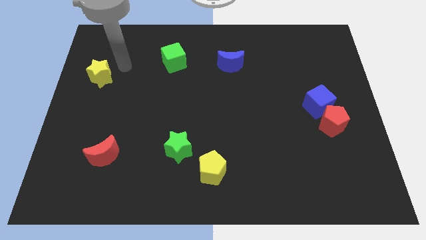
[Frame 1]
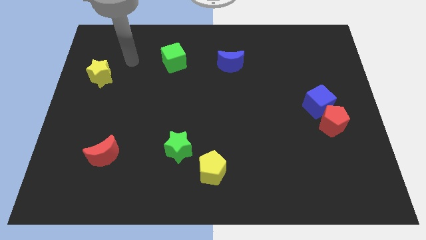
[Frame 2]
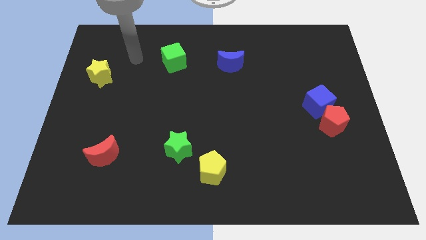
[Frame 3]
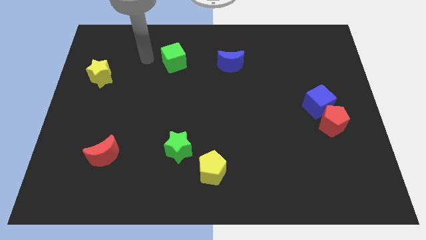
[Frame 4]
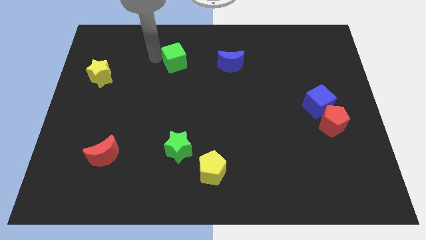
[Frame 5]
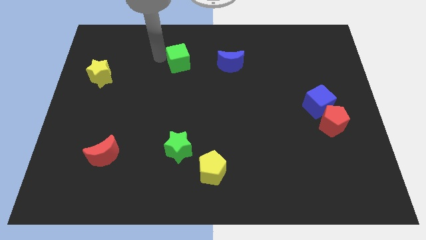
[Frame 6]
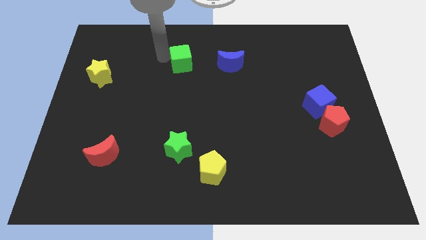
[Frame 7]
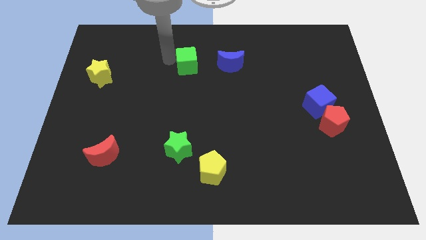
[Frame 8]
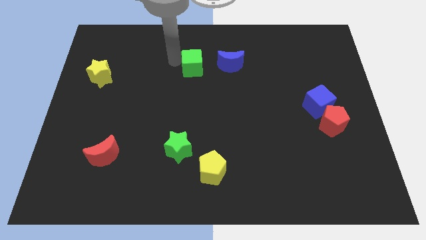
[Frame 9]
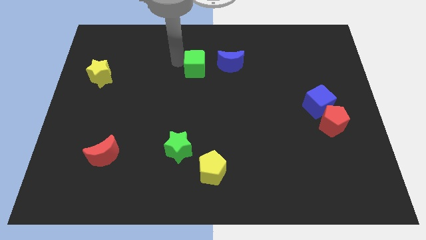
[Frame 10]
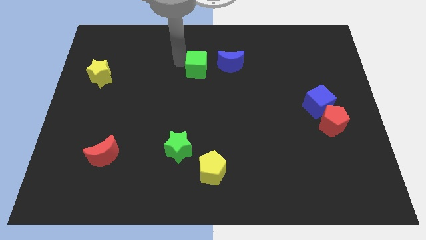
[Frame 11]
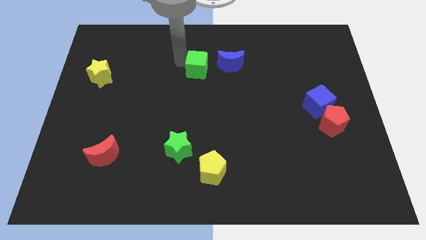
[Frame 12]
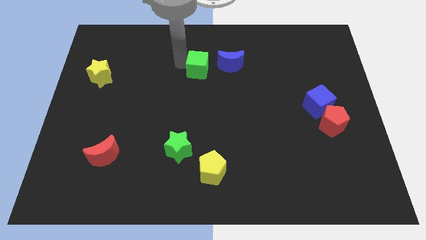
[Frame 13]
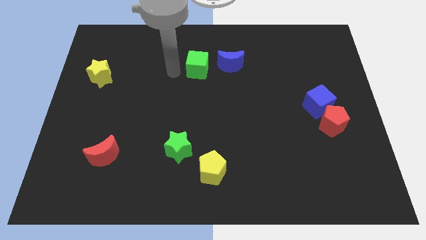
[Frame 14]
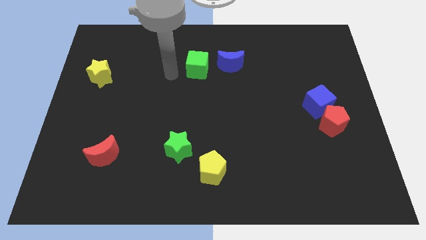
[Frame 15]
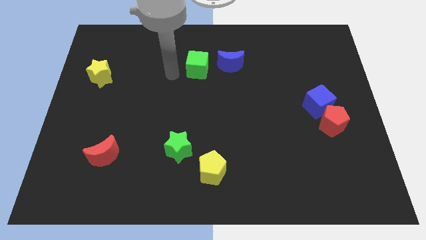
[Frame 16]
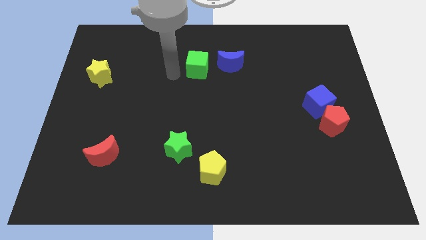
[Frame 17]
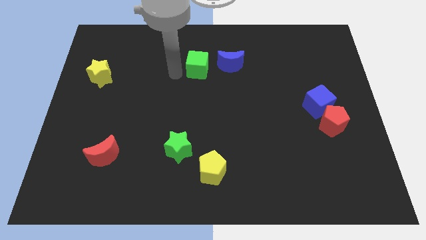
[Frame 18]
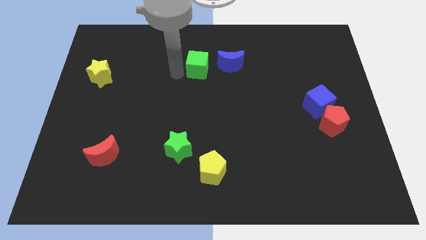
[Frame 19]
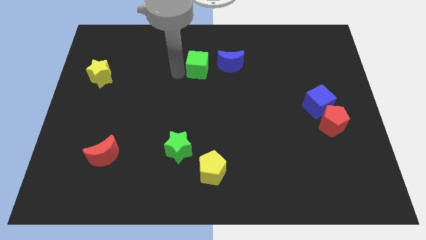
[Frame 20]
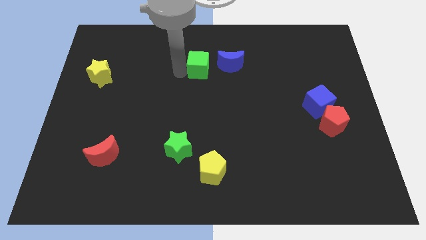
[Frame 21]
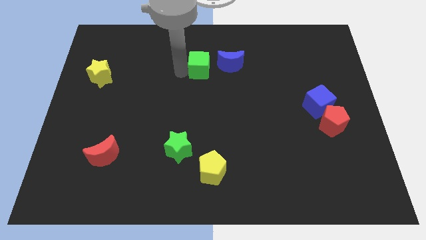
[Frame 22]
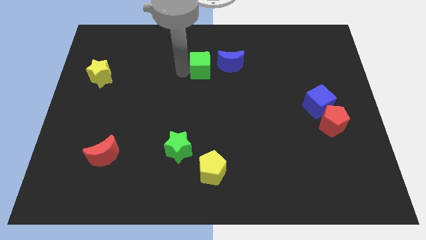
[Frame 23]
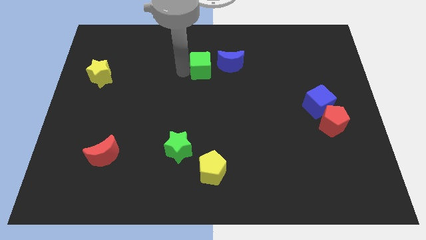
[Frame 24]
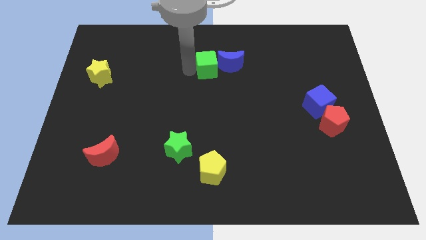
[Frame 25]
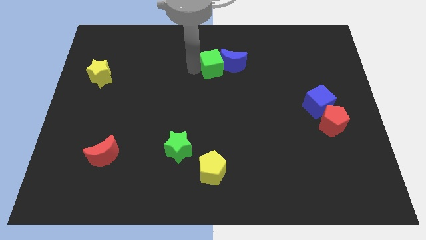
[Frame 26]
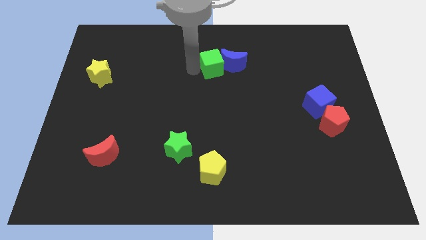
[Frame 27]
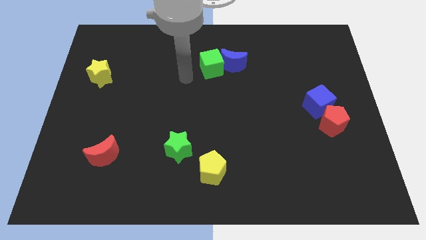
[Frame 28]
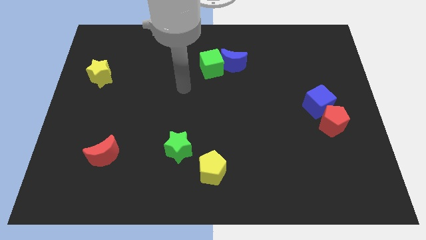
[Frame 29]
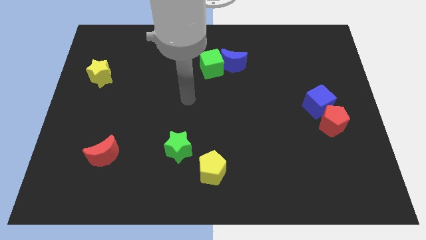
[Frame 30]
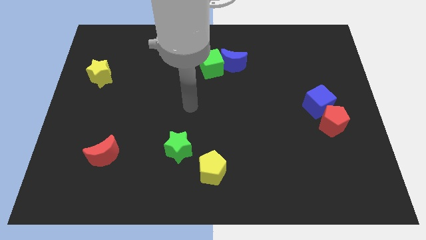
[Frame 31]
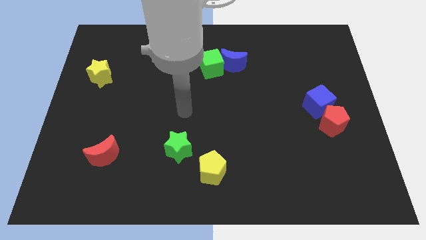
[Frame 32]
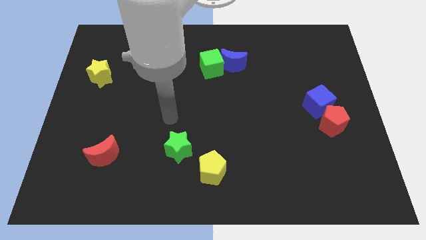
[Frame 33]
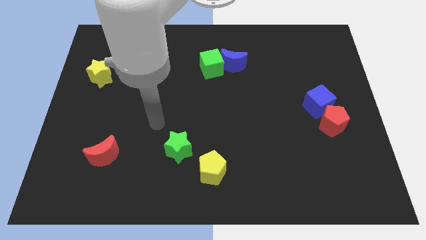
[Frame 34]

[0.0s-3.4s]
place the green cube to the left of the blue crescent

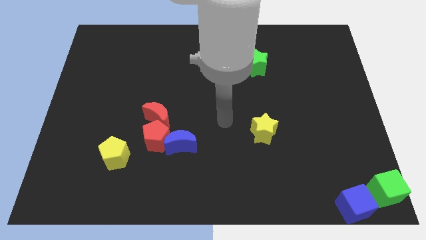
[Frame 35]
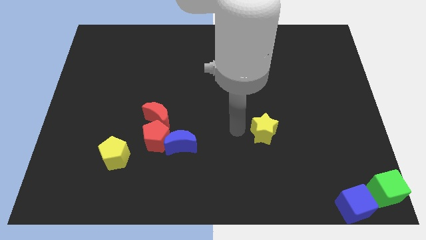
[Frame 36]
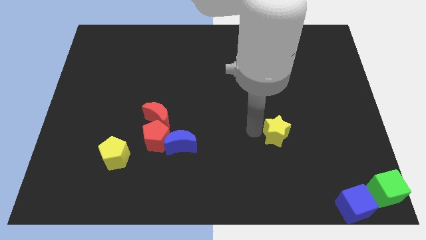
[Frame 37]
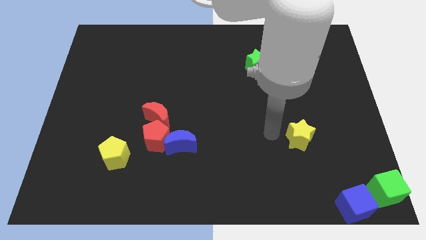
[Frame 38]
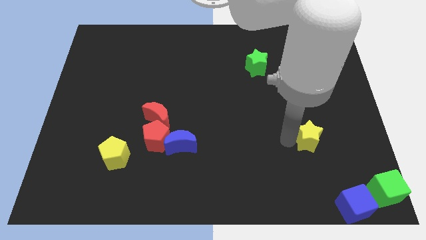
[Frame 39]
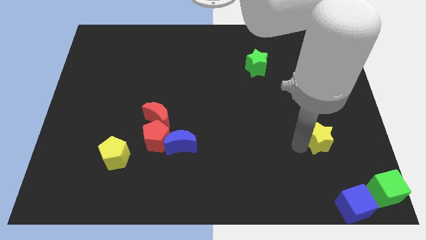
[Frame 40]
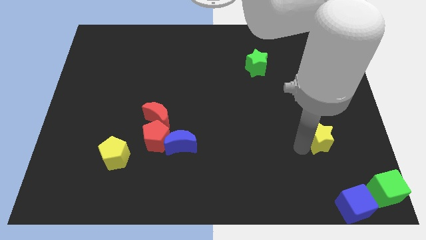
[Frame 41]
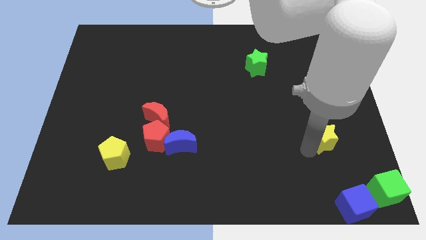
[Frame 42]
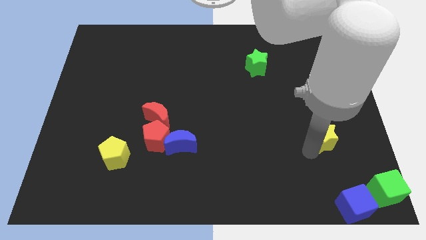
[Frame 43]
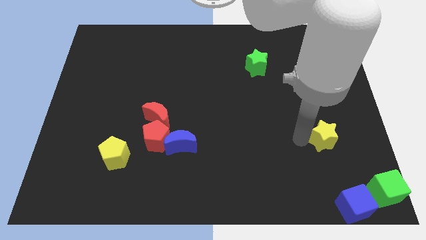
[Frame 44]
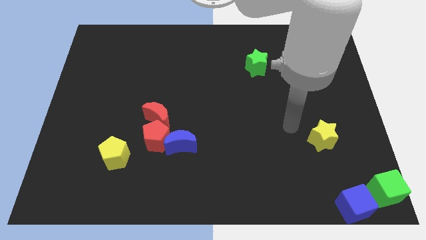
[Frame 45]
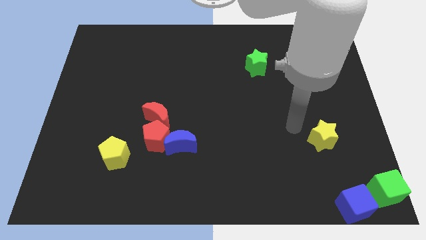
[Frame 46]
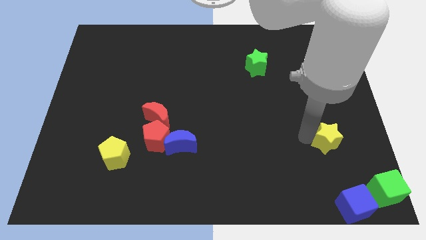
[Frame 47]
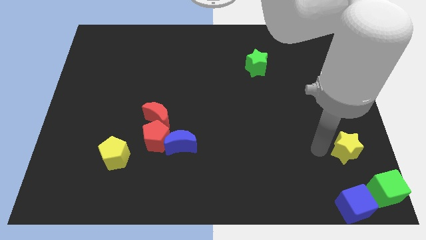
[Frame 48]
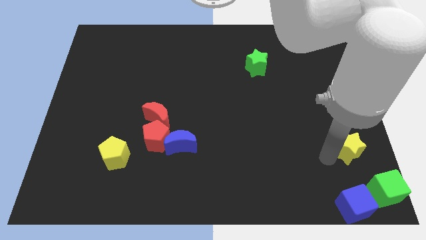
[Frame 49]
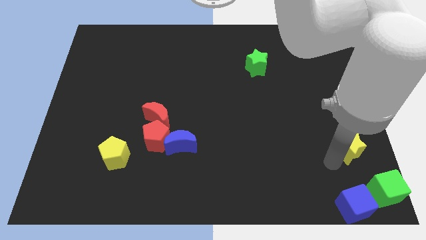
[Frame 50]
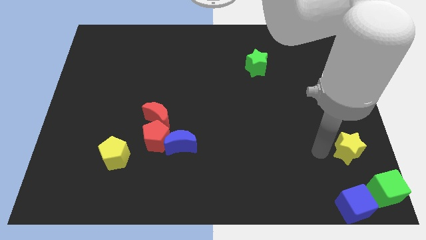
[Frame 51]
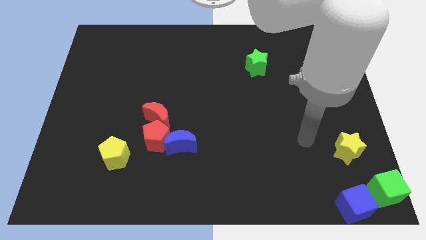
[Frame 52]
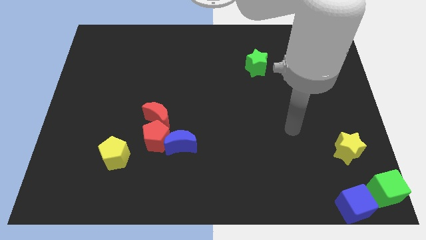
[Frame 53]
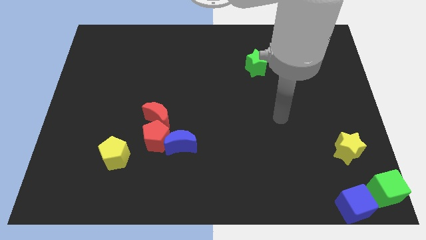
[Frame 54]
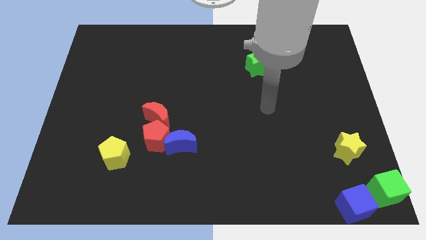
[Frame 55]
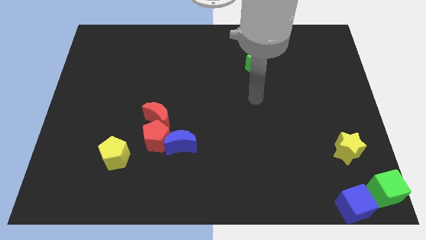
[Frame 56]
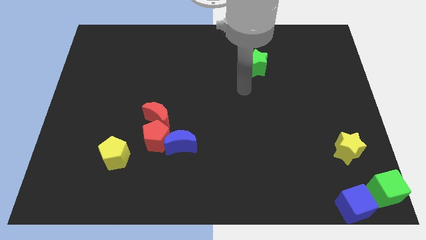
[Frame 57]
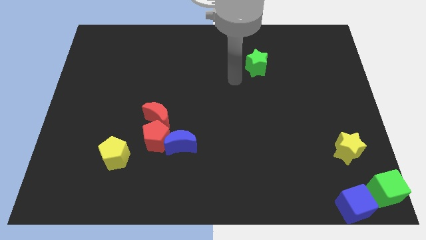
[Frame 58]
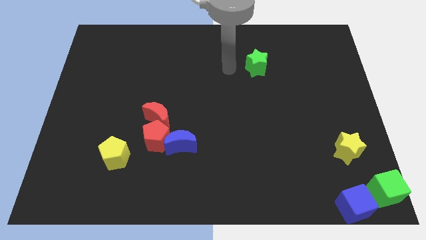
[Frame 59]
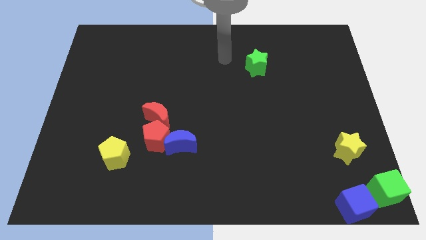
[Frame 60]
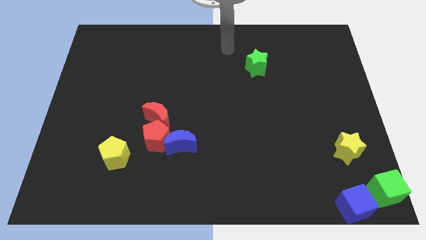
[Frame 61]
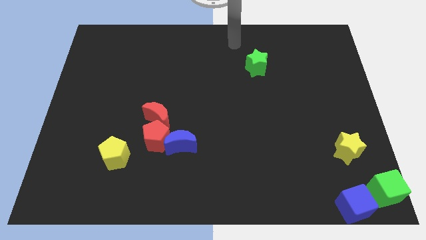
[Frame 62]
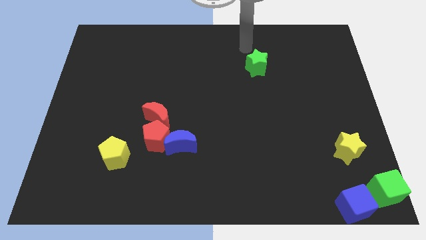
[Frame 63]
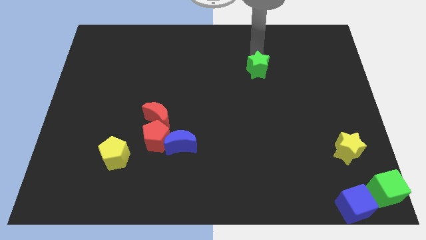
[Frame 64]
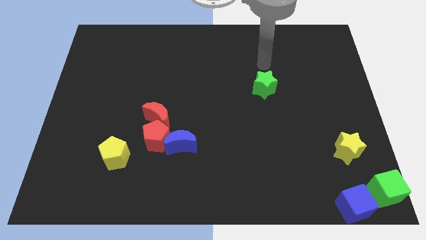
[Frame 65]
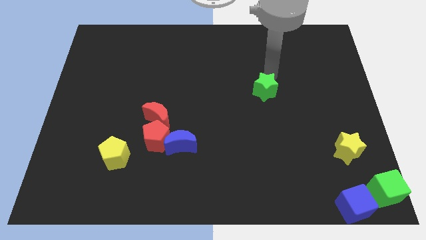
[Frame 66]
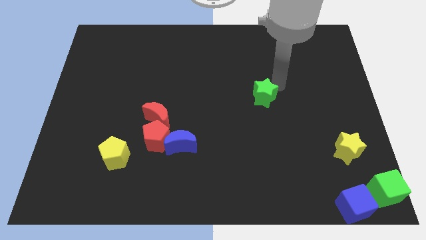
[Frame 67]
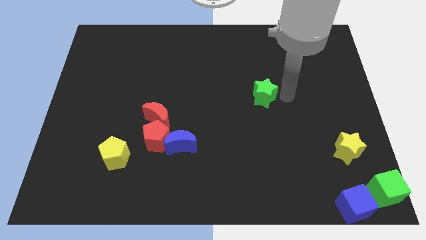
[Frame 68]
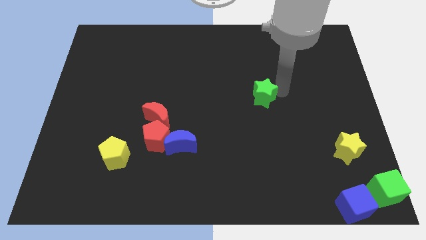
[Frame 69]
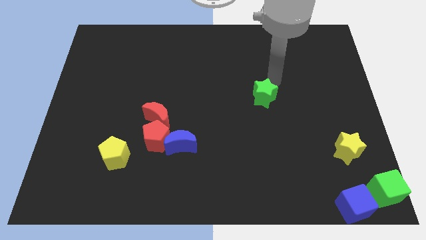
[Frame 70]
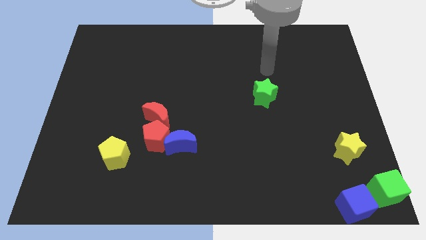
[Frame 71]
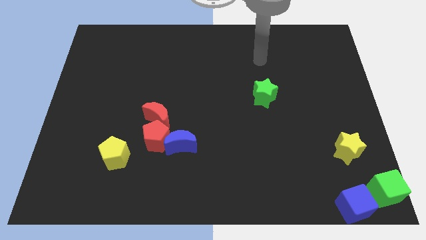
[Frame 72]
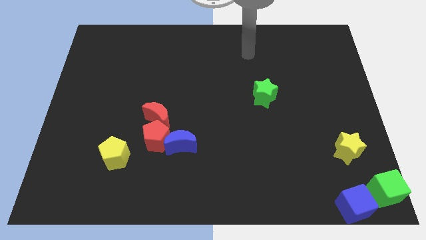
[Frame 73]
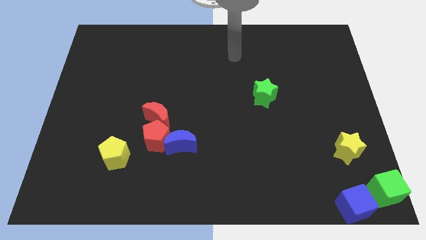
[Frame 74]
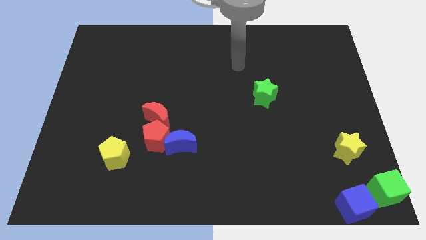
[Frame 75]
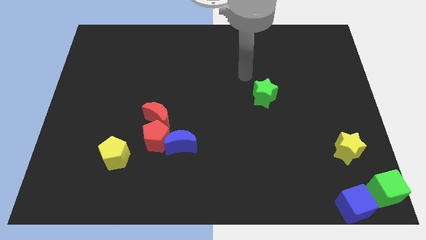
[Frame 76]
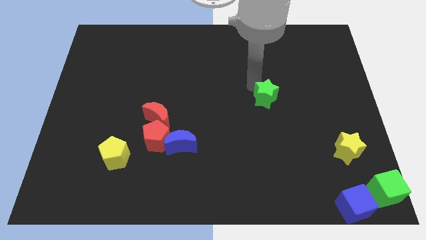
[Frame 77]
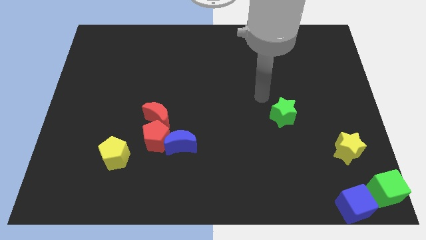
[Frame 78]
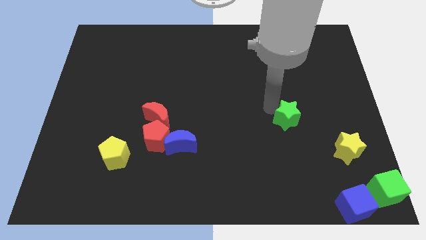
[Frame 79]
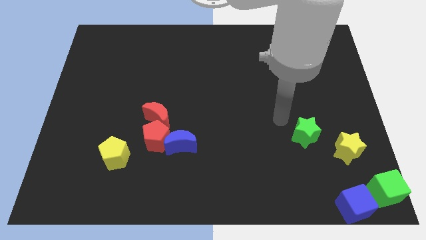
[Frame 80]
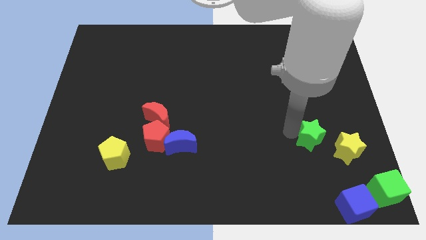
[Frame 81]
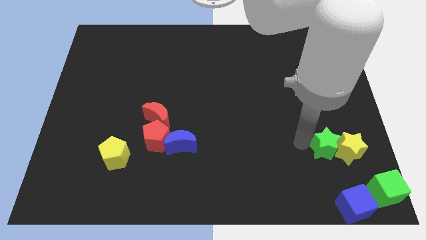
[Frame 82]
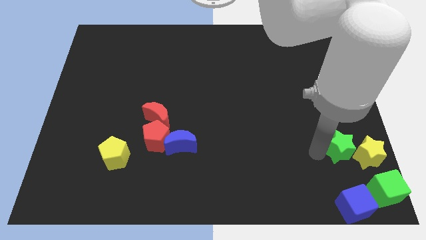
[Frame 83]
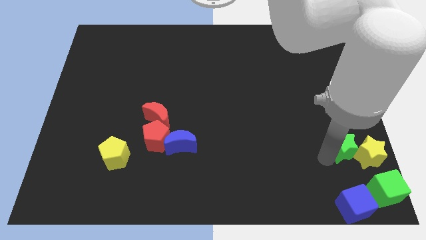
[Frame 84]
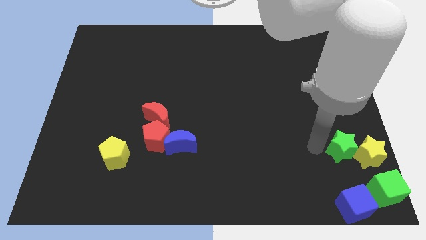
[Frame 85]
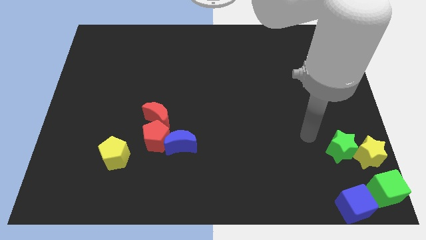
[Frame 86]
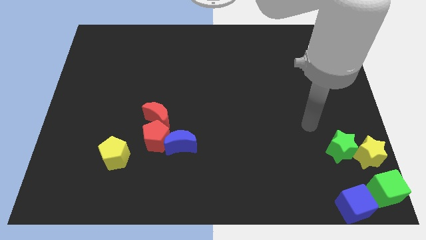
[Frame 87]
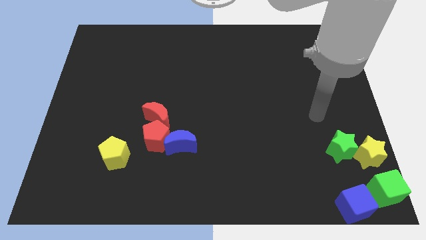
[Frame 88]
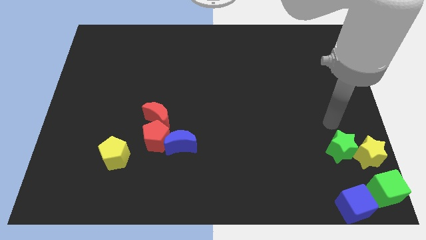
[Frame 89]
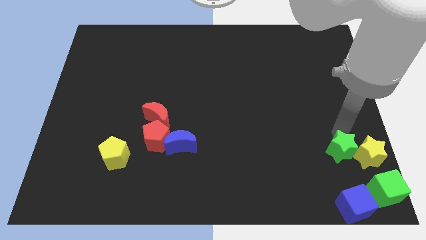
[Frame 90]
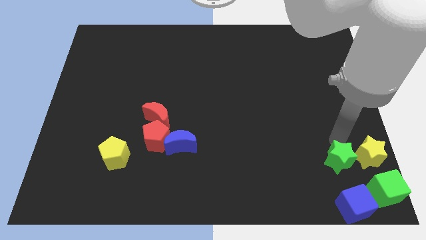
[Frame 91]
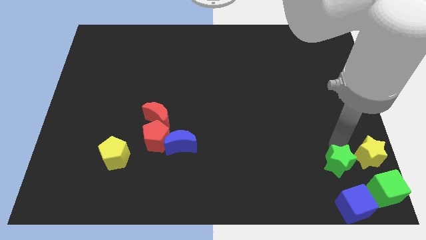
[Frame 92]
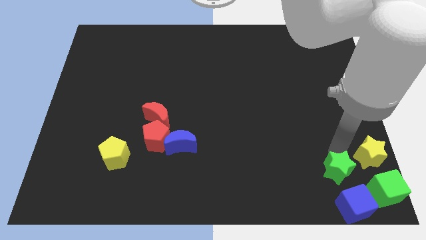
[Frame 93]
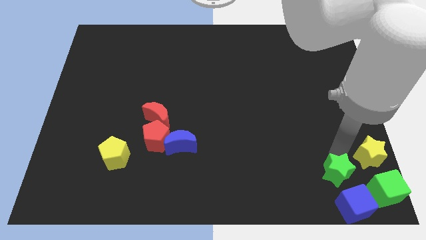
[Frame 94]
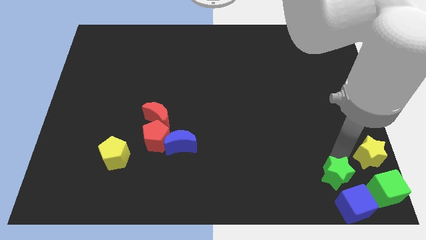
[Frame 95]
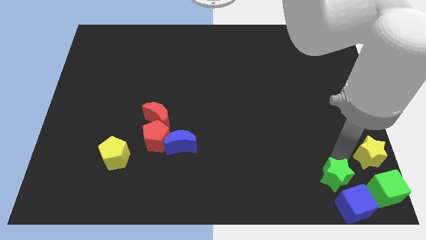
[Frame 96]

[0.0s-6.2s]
drag the yellow and green star to the bottom right corner of the board
